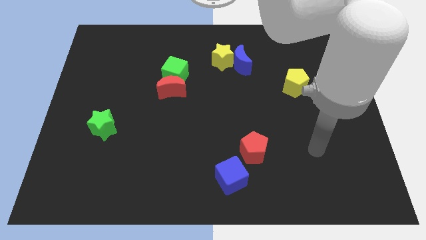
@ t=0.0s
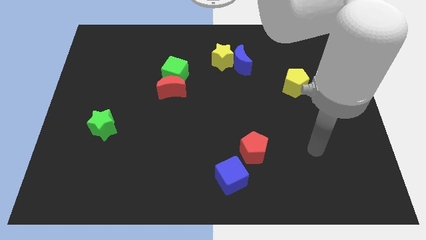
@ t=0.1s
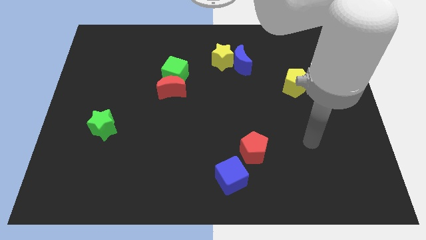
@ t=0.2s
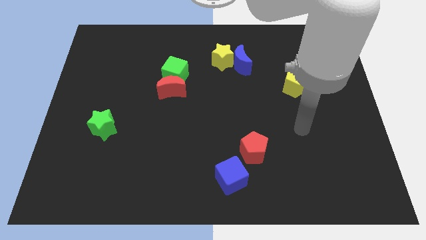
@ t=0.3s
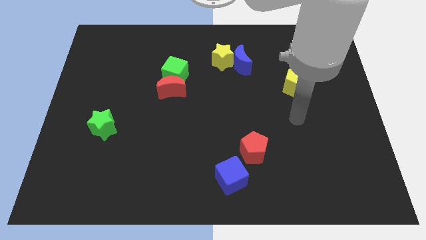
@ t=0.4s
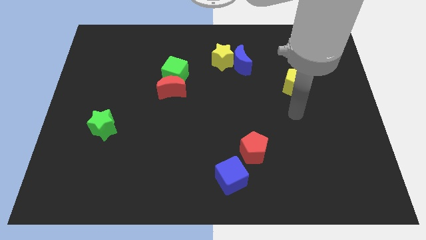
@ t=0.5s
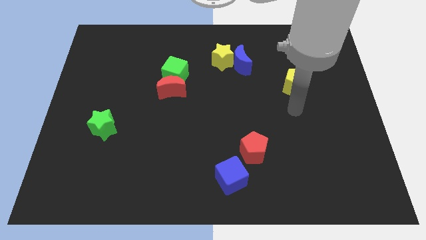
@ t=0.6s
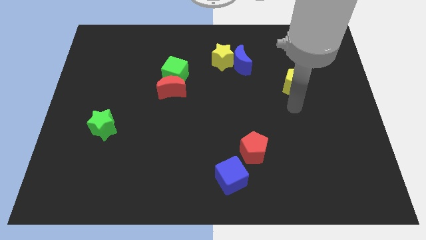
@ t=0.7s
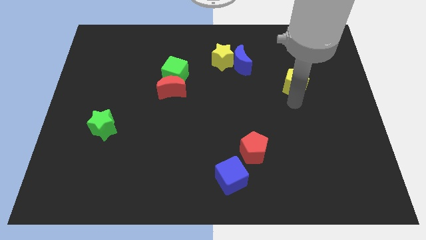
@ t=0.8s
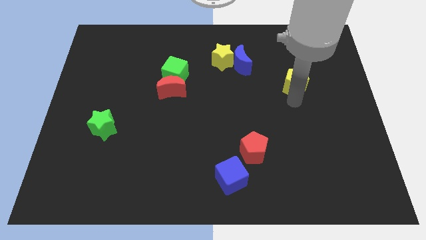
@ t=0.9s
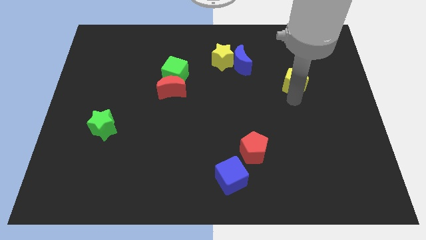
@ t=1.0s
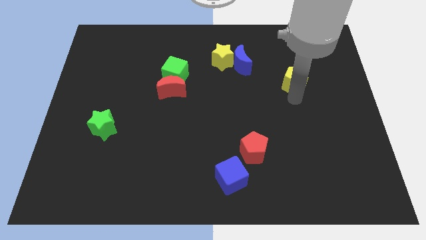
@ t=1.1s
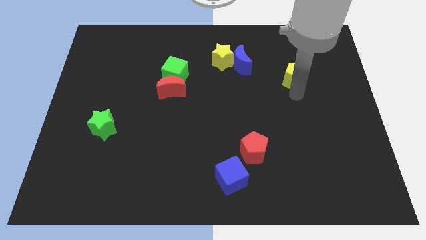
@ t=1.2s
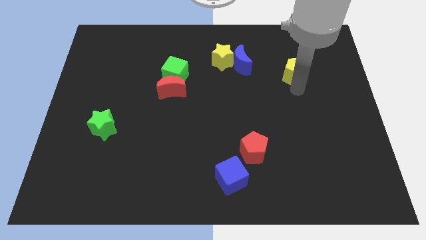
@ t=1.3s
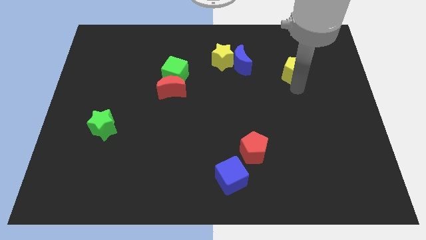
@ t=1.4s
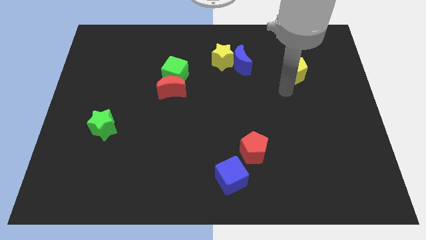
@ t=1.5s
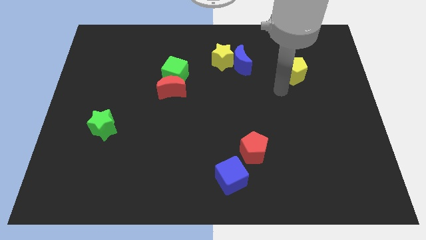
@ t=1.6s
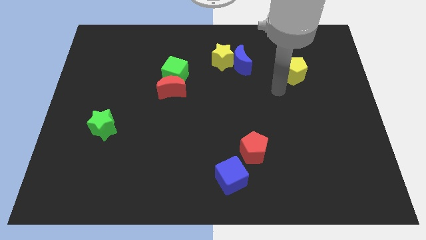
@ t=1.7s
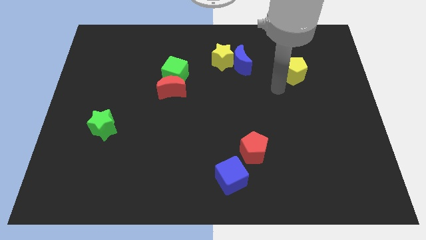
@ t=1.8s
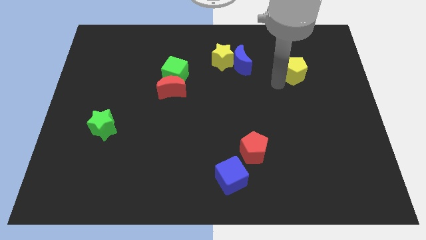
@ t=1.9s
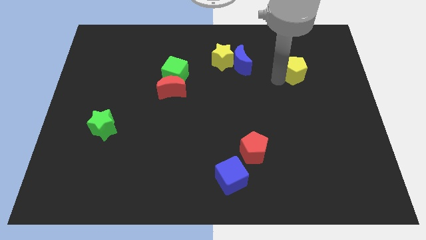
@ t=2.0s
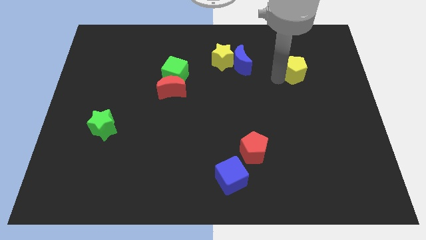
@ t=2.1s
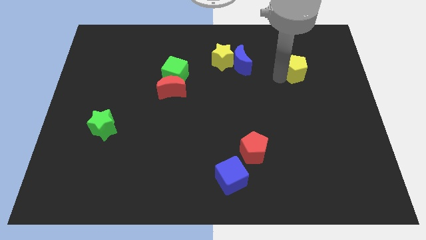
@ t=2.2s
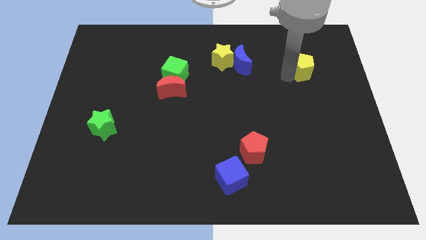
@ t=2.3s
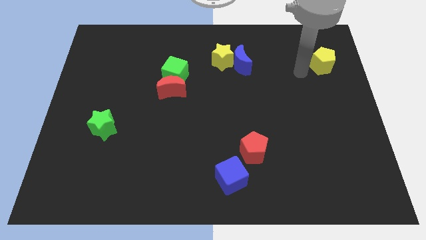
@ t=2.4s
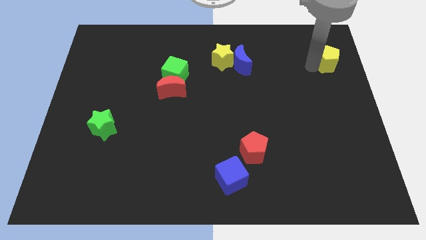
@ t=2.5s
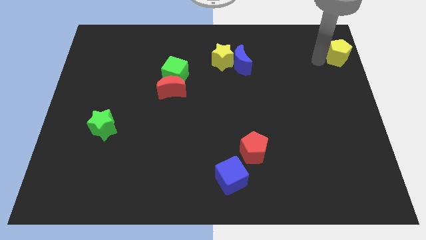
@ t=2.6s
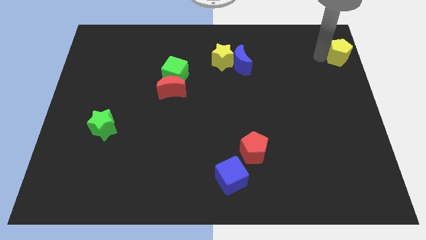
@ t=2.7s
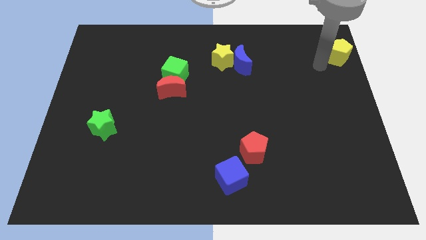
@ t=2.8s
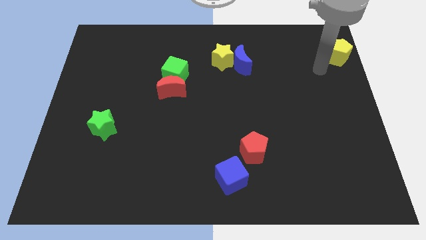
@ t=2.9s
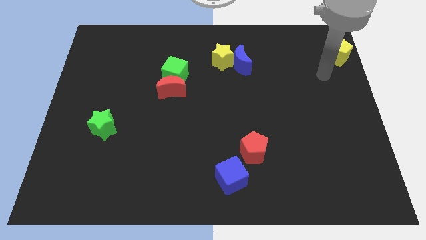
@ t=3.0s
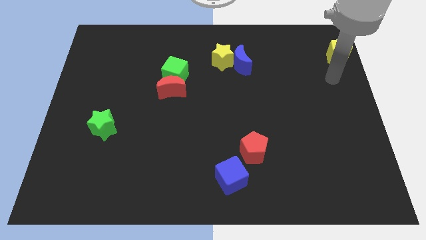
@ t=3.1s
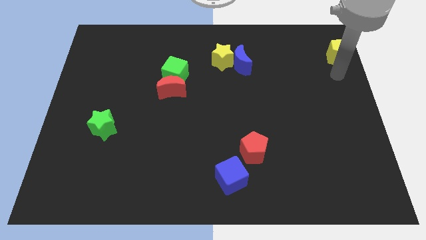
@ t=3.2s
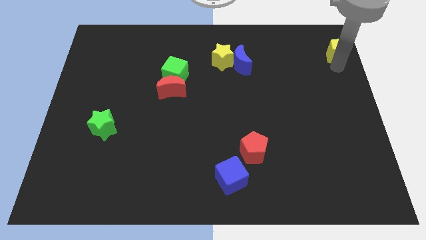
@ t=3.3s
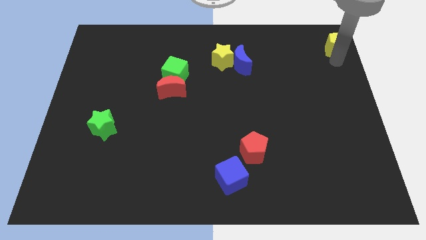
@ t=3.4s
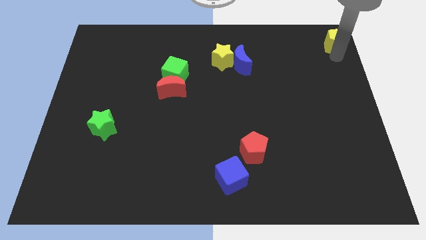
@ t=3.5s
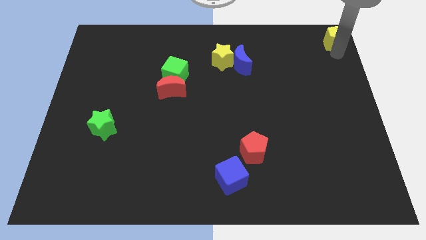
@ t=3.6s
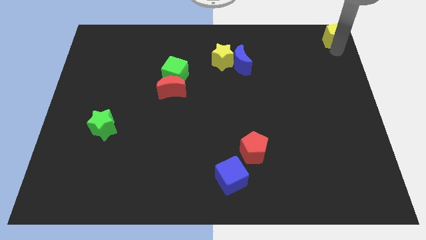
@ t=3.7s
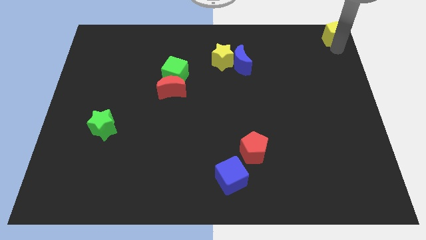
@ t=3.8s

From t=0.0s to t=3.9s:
place the yellow pentagon to the top right side of the board

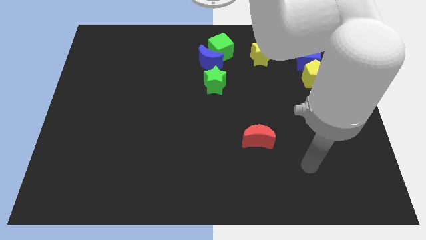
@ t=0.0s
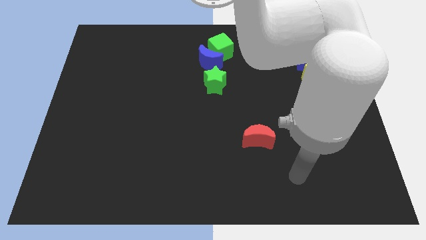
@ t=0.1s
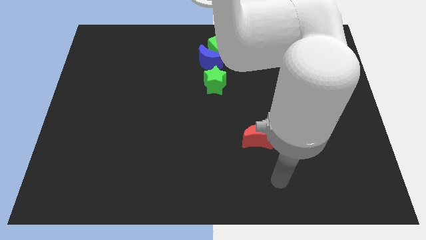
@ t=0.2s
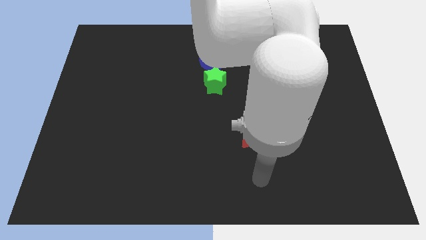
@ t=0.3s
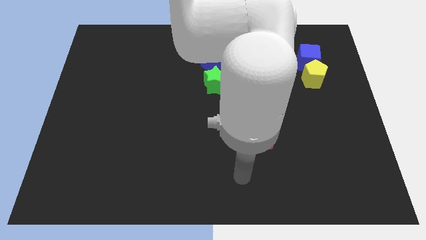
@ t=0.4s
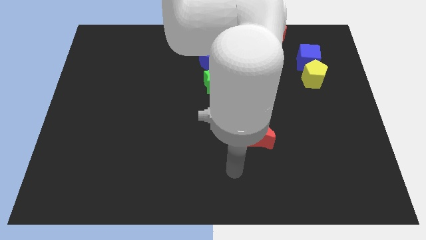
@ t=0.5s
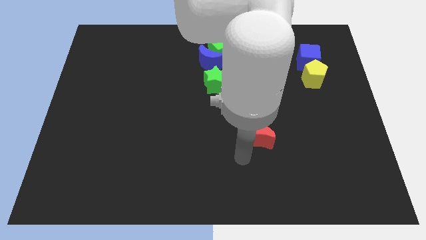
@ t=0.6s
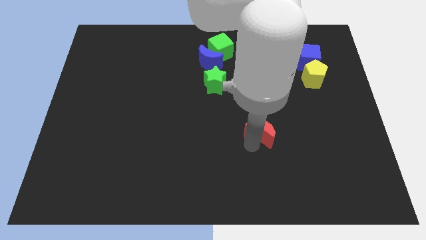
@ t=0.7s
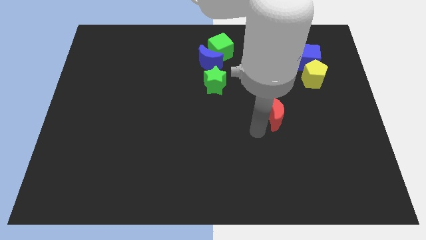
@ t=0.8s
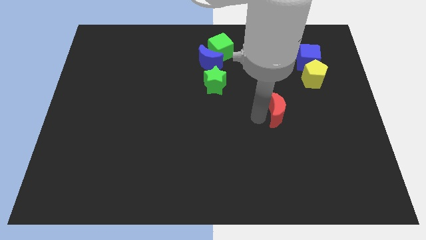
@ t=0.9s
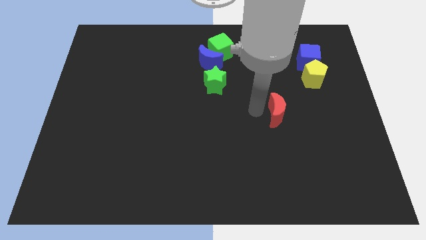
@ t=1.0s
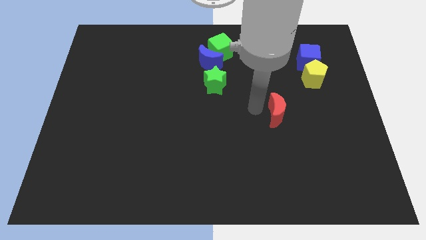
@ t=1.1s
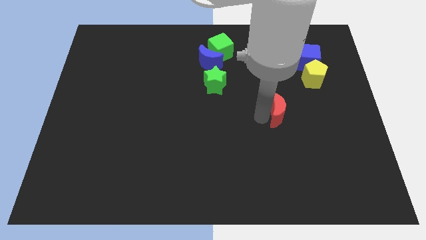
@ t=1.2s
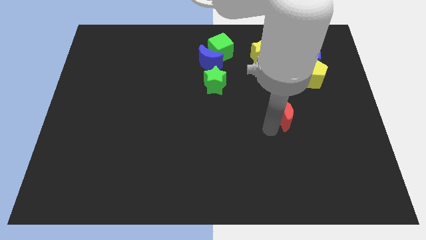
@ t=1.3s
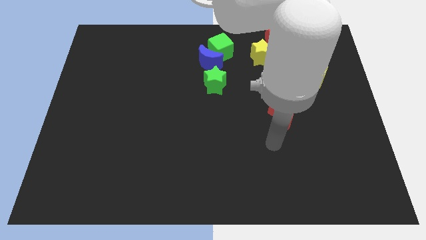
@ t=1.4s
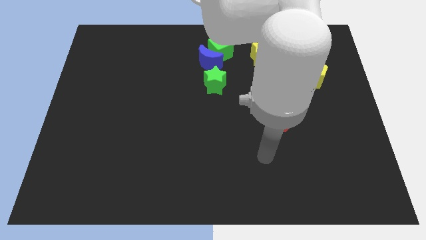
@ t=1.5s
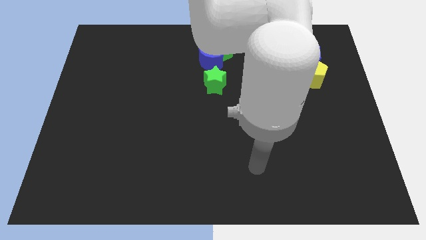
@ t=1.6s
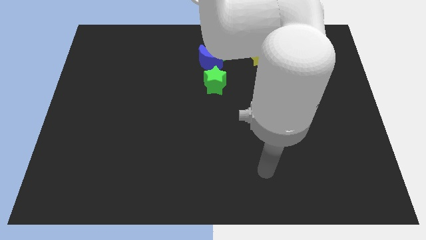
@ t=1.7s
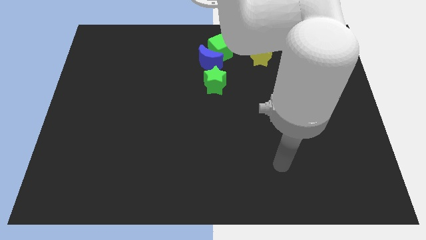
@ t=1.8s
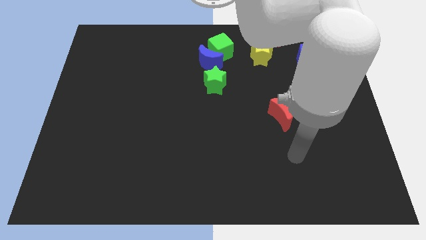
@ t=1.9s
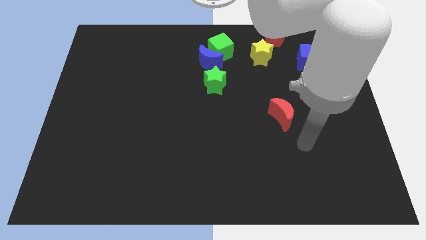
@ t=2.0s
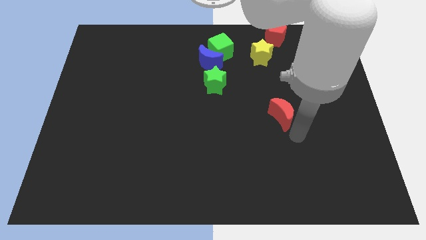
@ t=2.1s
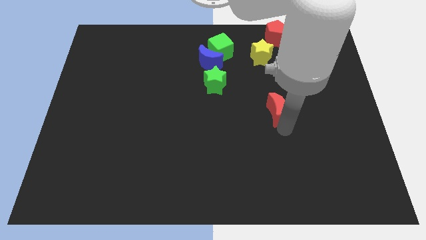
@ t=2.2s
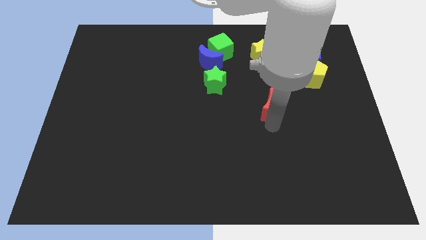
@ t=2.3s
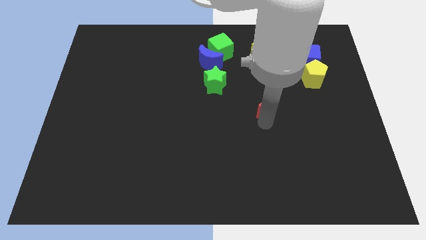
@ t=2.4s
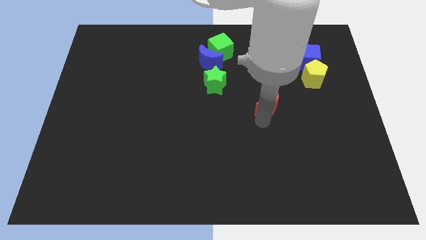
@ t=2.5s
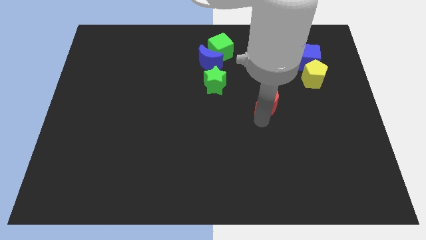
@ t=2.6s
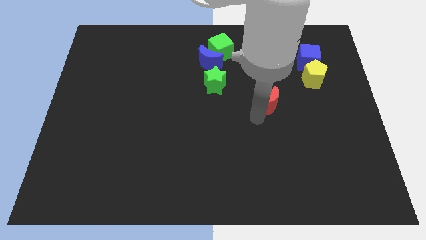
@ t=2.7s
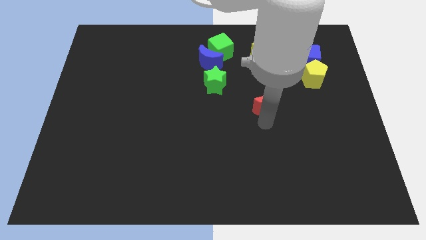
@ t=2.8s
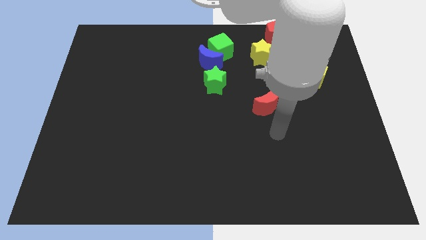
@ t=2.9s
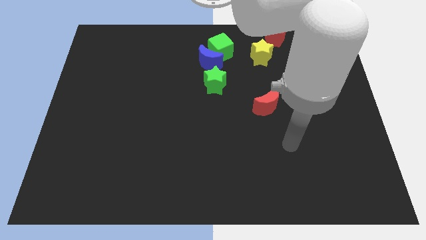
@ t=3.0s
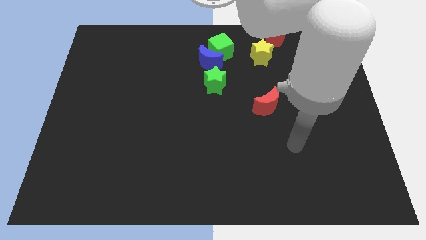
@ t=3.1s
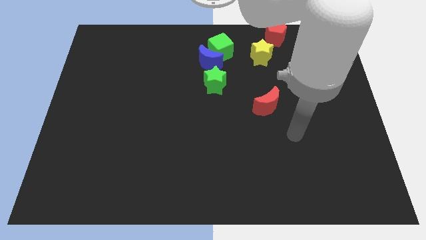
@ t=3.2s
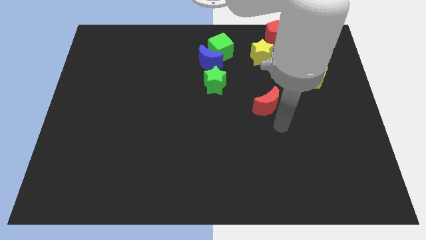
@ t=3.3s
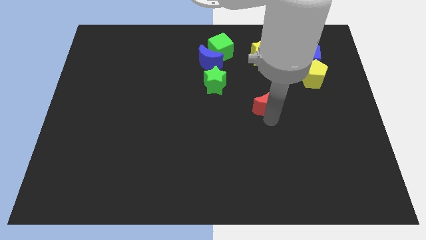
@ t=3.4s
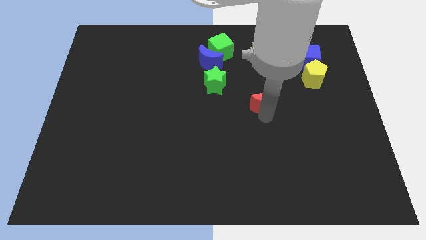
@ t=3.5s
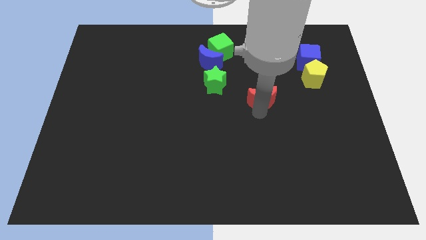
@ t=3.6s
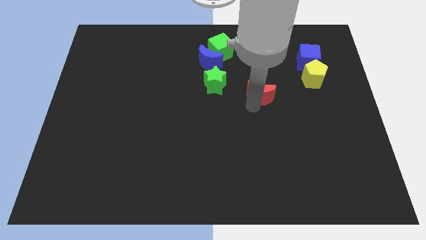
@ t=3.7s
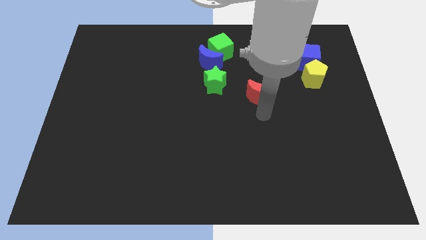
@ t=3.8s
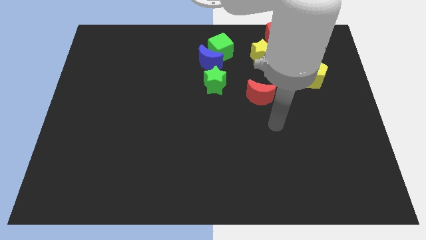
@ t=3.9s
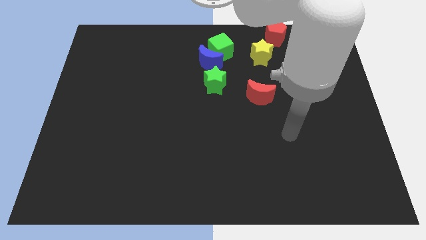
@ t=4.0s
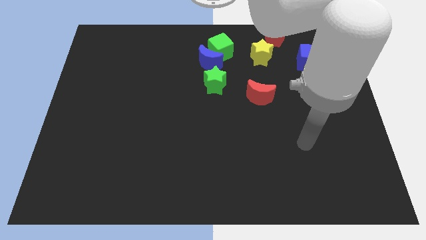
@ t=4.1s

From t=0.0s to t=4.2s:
place red crescent to the bottom right of green star

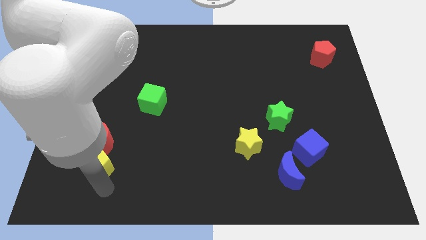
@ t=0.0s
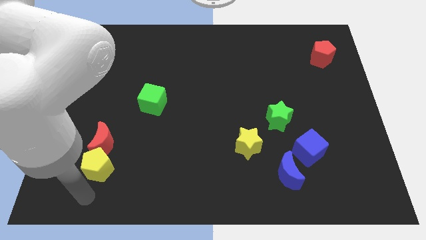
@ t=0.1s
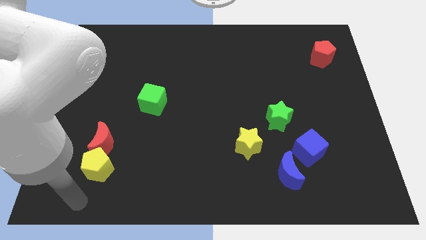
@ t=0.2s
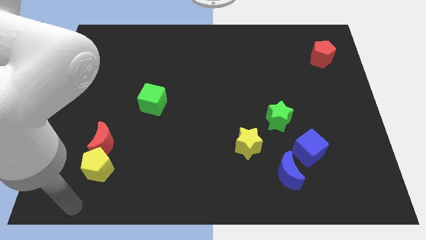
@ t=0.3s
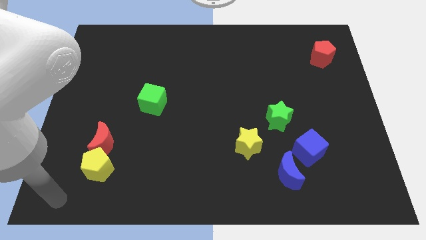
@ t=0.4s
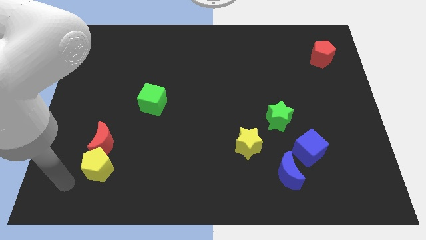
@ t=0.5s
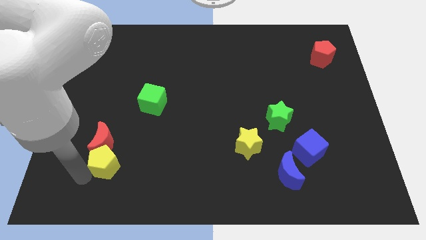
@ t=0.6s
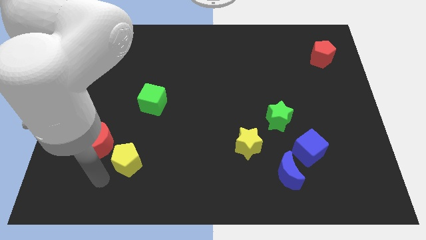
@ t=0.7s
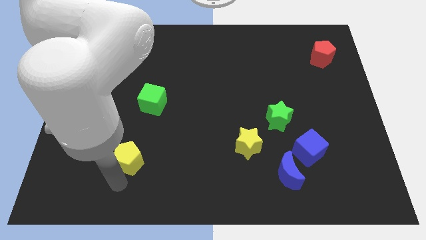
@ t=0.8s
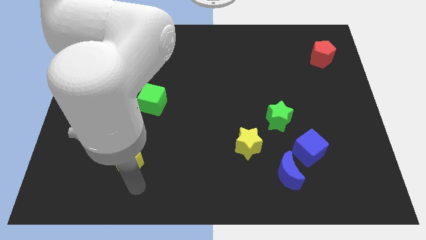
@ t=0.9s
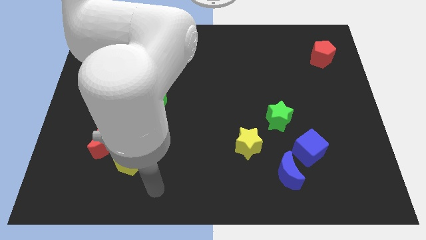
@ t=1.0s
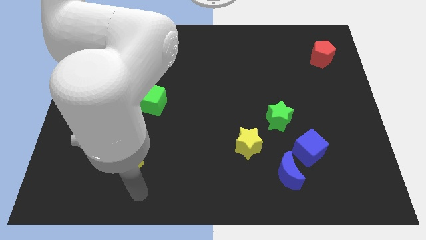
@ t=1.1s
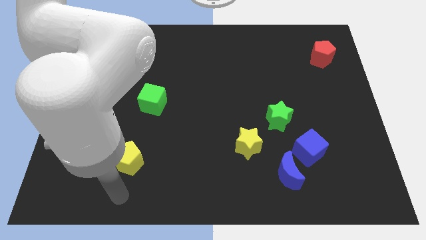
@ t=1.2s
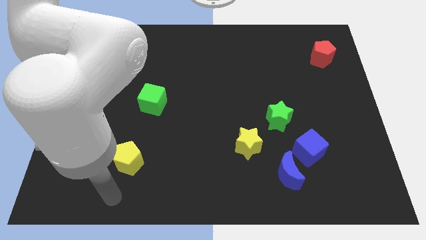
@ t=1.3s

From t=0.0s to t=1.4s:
move the yellow pentagon to the bottom right of the red crescent
